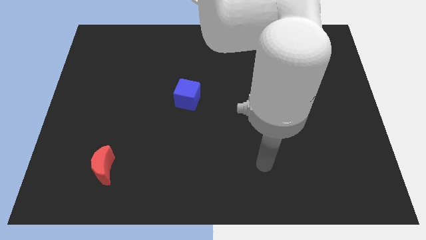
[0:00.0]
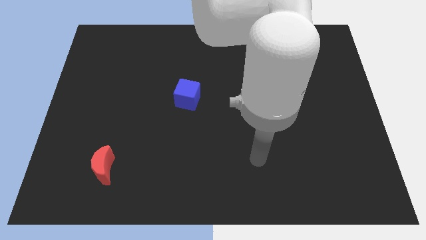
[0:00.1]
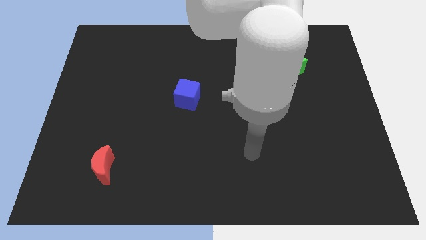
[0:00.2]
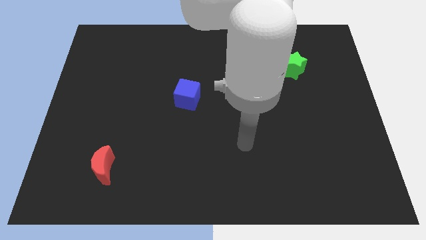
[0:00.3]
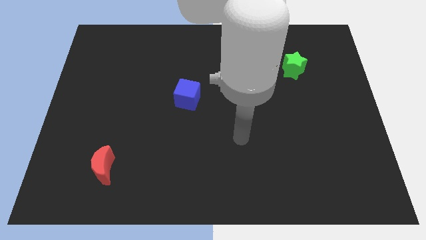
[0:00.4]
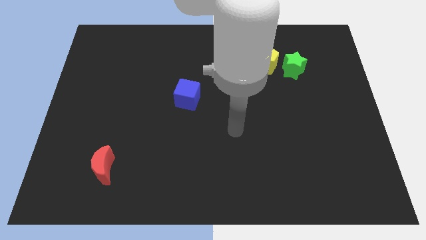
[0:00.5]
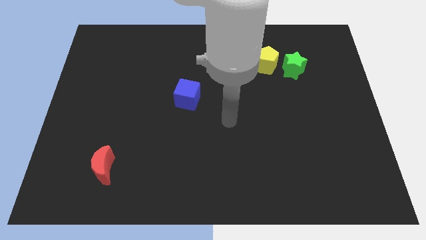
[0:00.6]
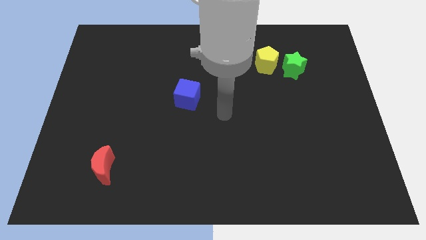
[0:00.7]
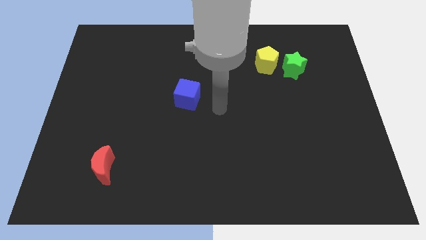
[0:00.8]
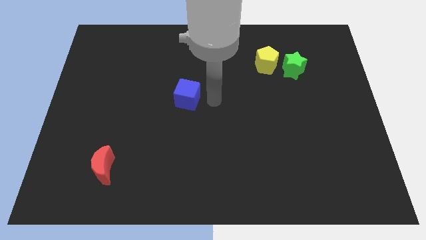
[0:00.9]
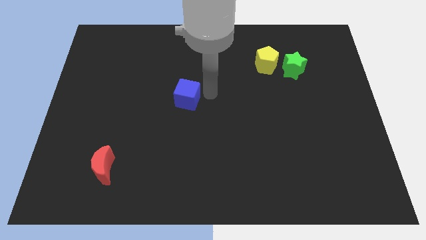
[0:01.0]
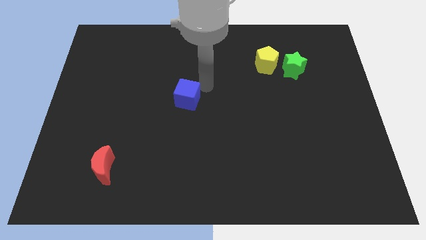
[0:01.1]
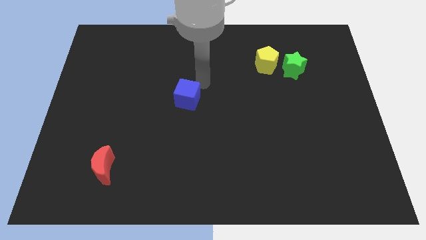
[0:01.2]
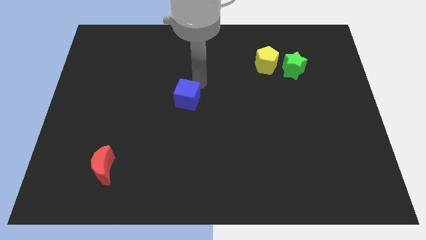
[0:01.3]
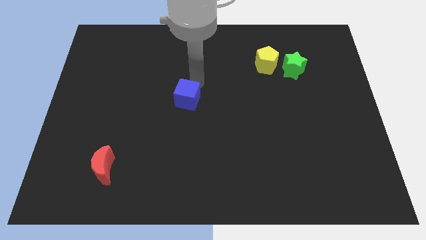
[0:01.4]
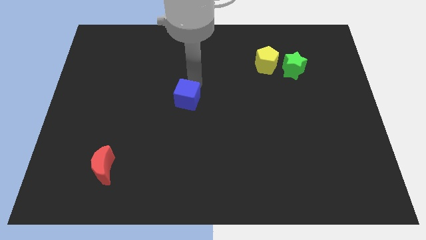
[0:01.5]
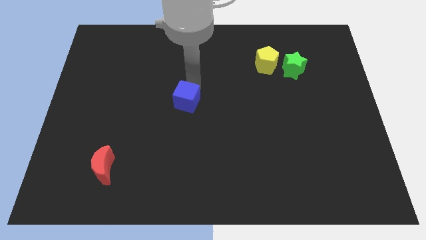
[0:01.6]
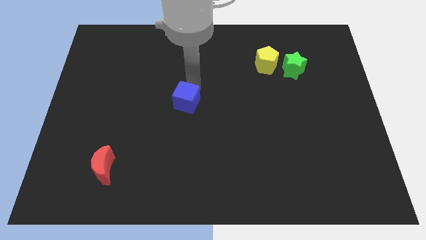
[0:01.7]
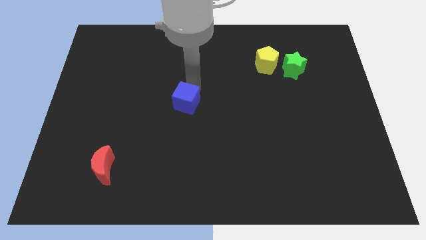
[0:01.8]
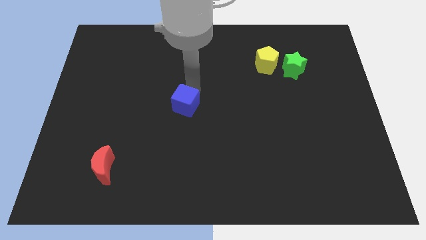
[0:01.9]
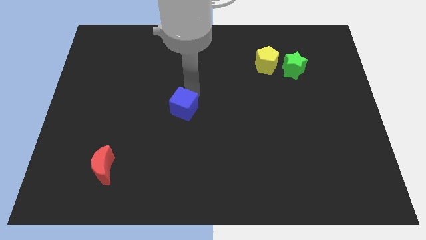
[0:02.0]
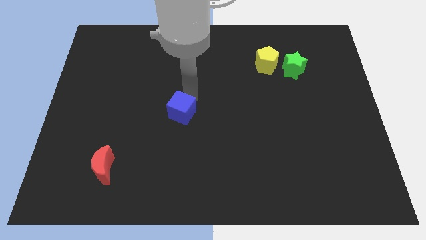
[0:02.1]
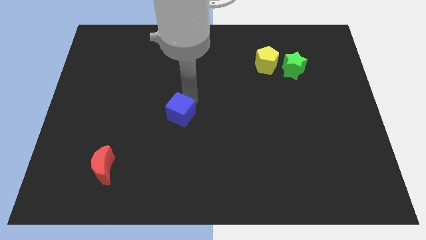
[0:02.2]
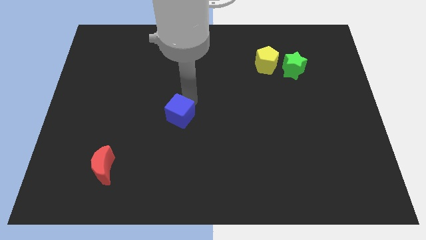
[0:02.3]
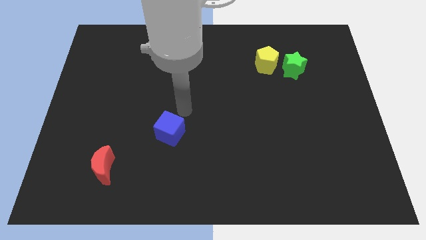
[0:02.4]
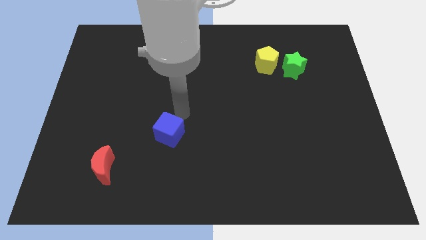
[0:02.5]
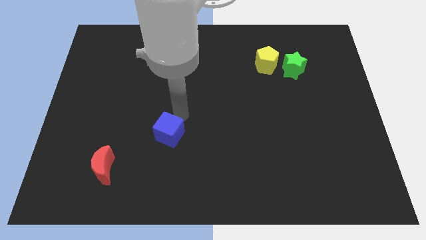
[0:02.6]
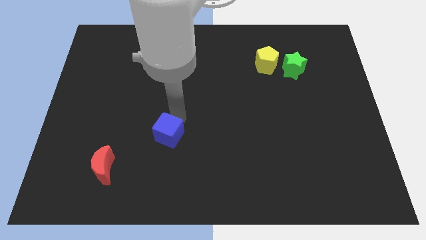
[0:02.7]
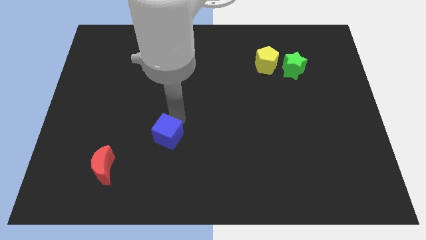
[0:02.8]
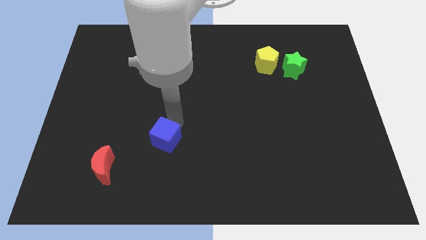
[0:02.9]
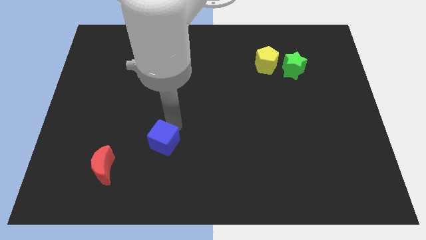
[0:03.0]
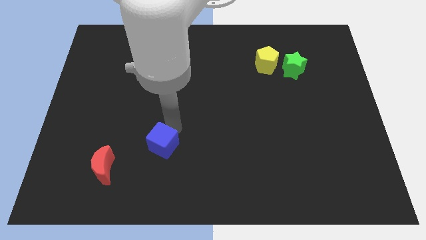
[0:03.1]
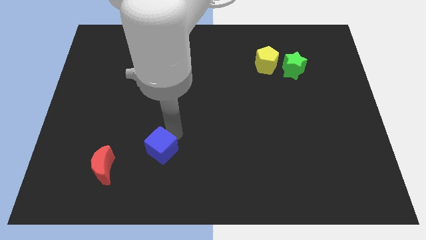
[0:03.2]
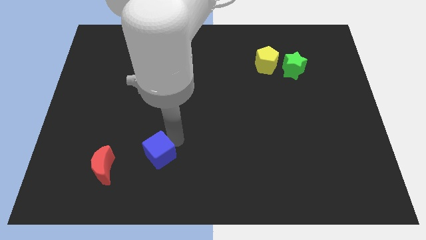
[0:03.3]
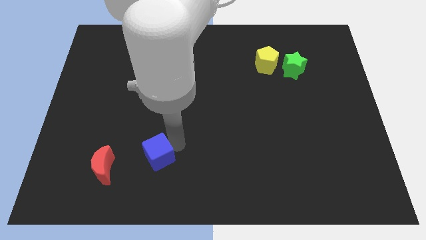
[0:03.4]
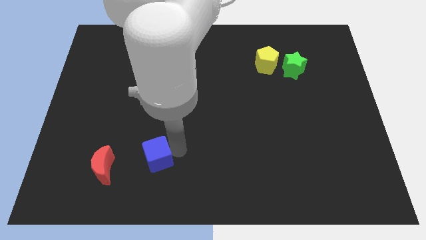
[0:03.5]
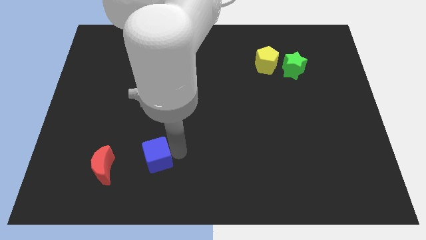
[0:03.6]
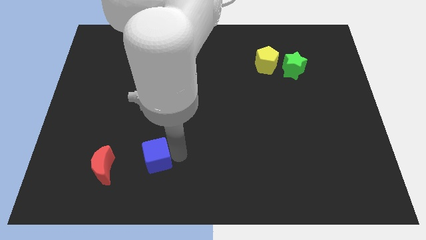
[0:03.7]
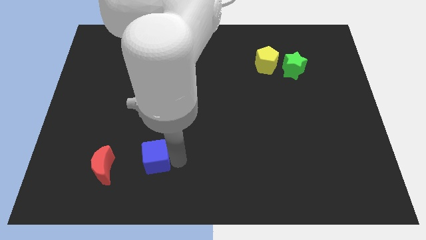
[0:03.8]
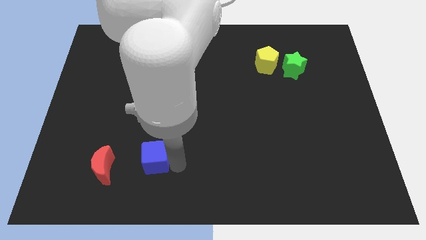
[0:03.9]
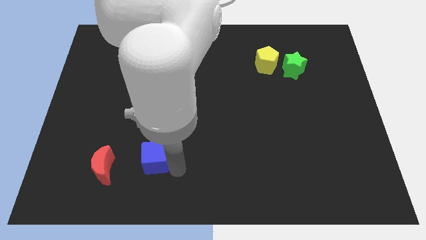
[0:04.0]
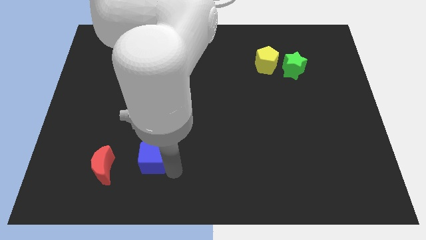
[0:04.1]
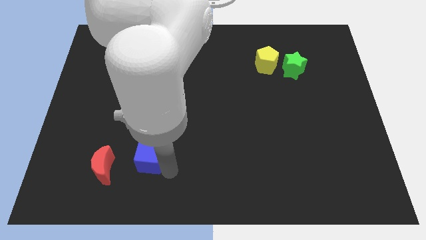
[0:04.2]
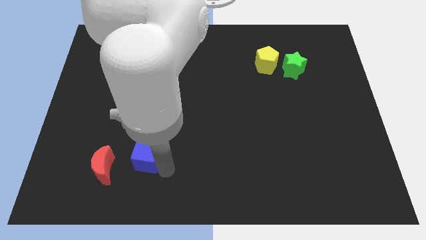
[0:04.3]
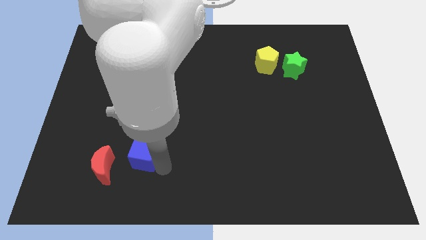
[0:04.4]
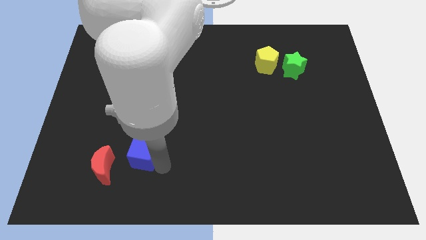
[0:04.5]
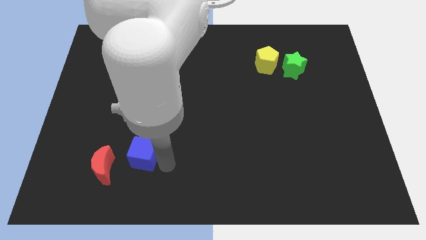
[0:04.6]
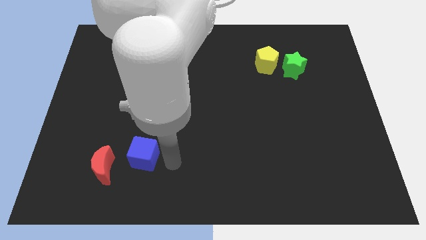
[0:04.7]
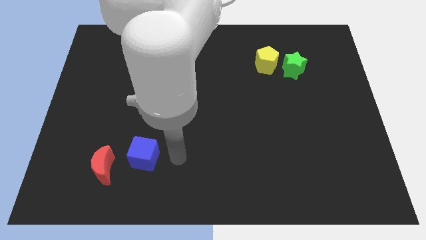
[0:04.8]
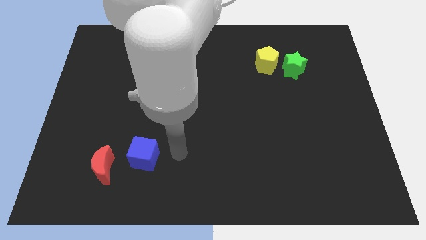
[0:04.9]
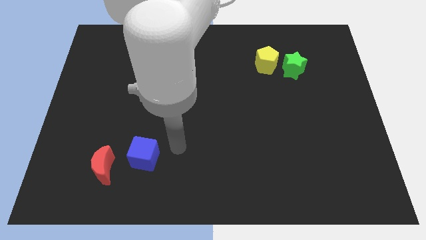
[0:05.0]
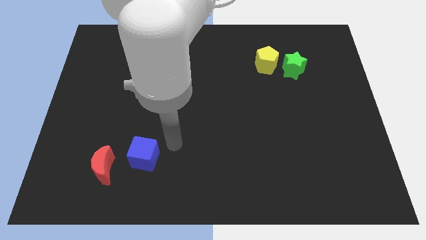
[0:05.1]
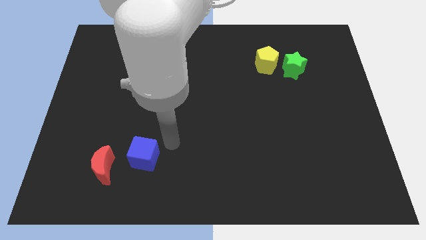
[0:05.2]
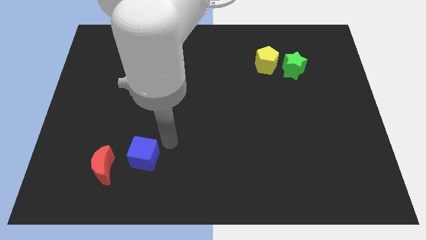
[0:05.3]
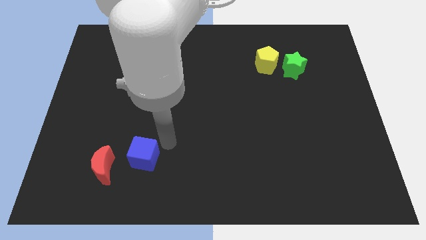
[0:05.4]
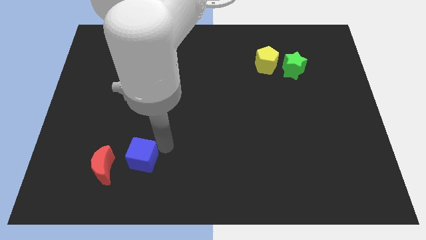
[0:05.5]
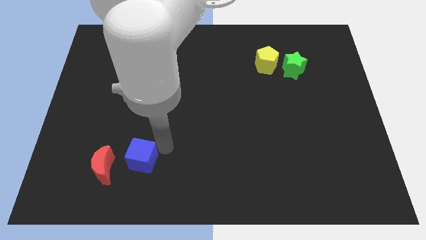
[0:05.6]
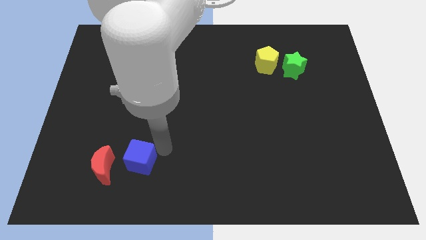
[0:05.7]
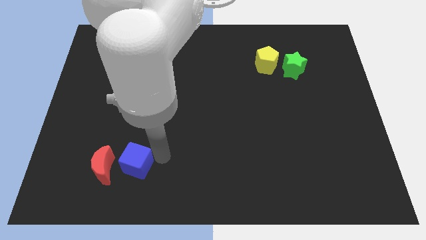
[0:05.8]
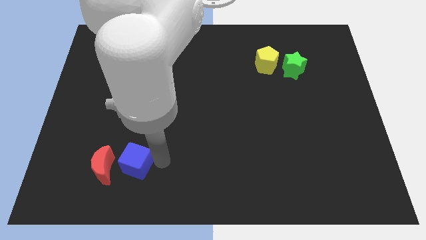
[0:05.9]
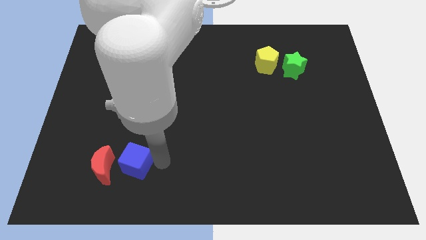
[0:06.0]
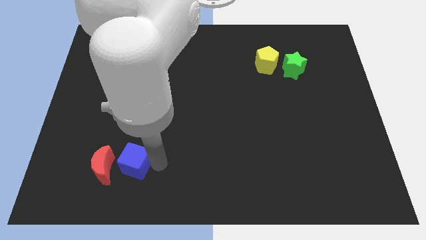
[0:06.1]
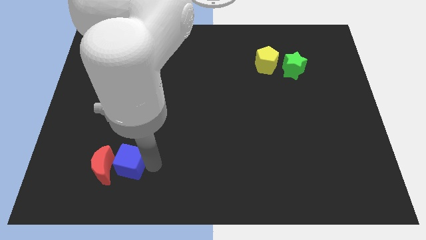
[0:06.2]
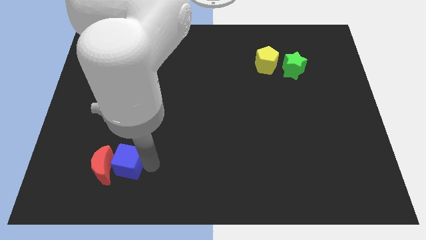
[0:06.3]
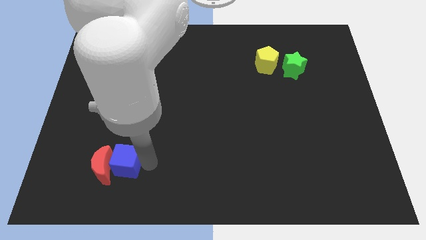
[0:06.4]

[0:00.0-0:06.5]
put the blue block towards the red moon

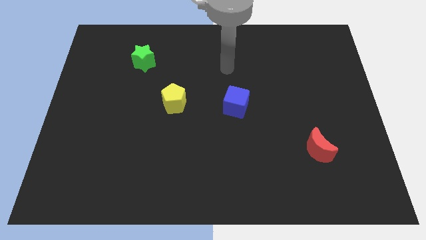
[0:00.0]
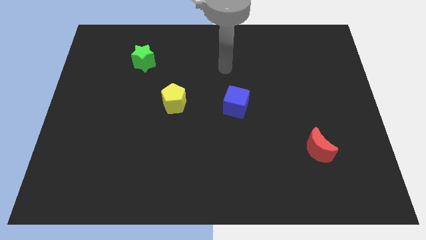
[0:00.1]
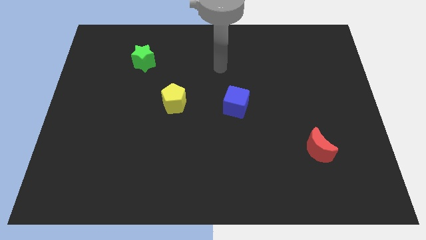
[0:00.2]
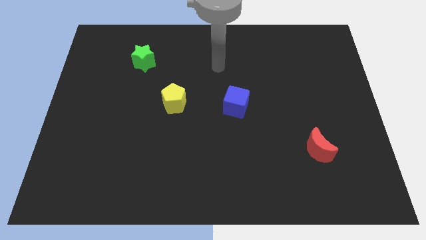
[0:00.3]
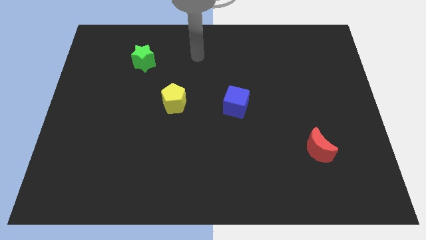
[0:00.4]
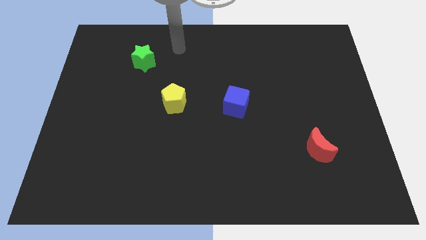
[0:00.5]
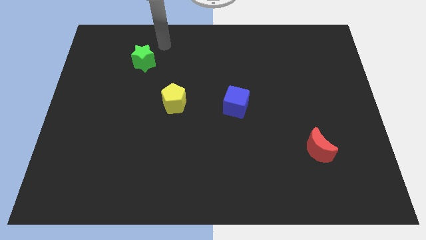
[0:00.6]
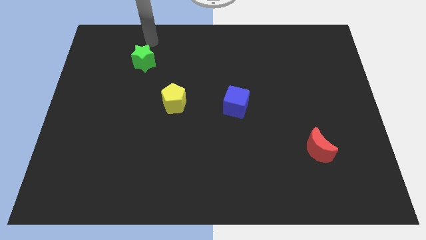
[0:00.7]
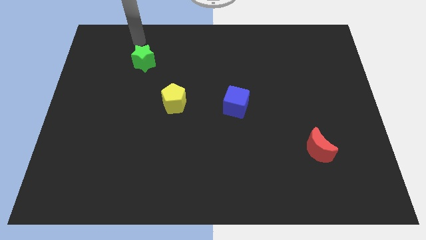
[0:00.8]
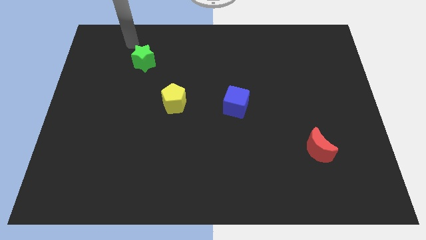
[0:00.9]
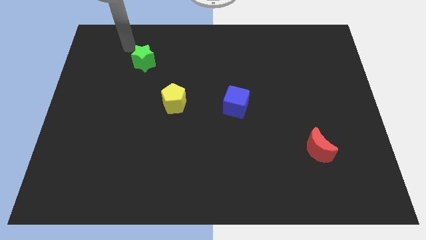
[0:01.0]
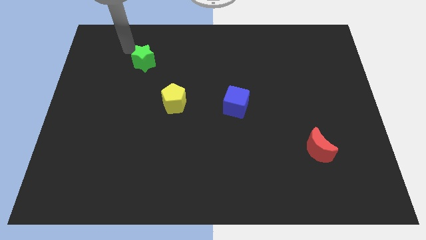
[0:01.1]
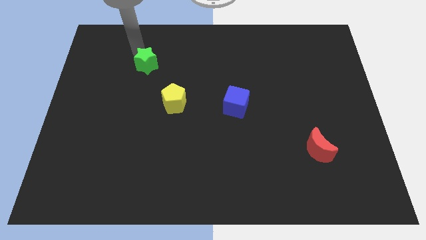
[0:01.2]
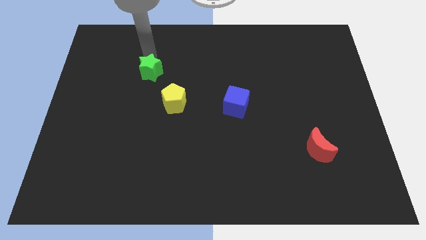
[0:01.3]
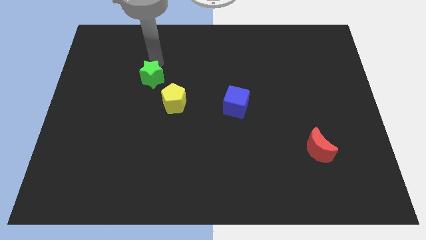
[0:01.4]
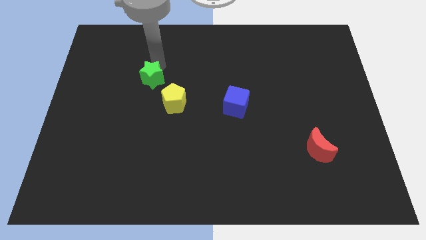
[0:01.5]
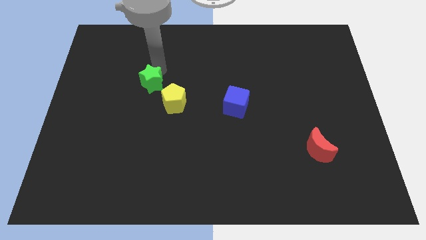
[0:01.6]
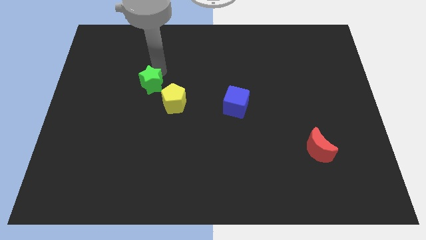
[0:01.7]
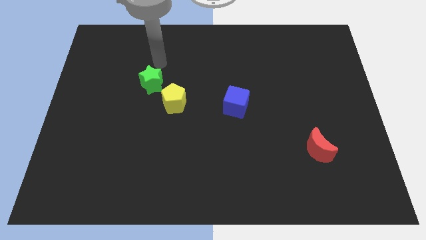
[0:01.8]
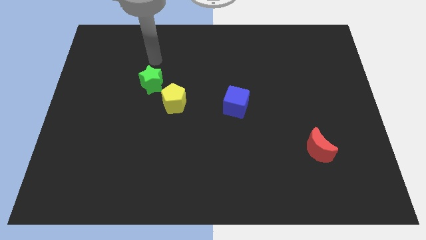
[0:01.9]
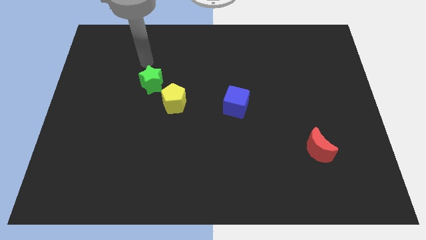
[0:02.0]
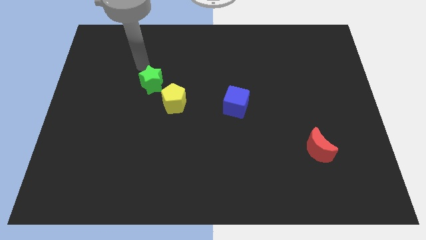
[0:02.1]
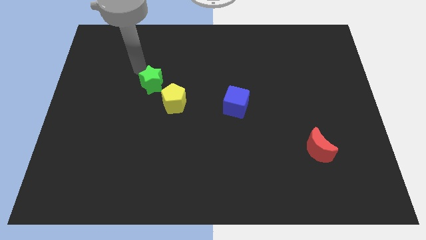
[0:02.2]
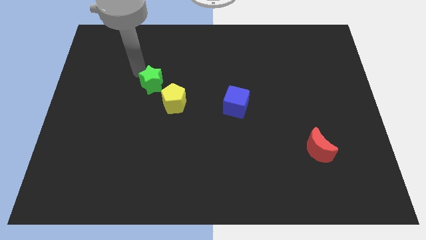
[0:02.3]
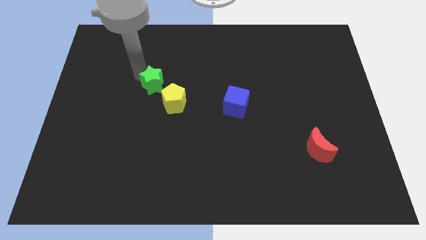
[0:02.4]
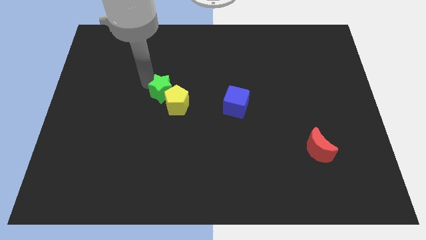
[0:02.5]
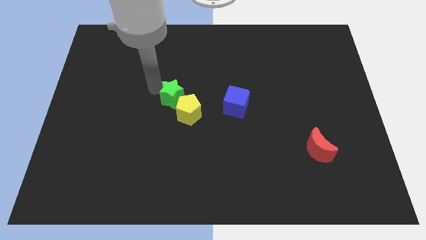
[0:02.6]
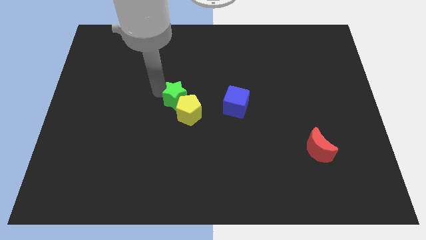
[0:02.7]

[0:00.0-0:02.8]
push the green star to the pentagon
